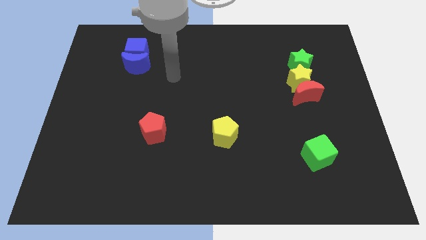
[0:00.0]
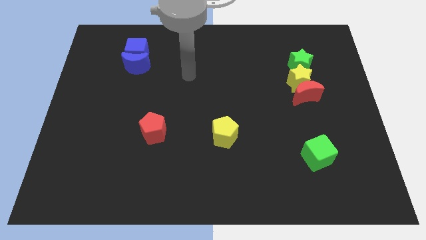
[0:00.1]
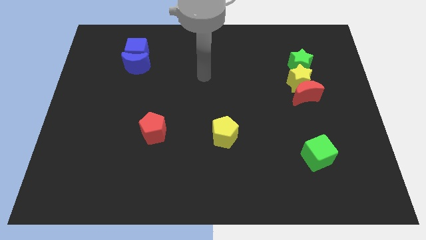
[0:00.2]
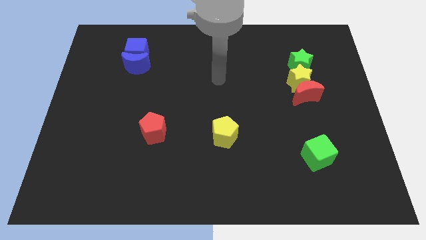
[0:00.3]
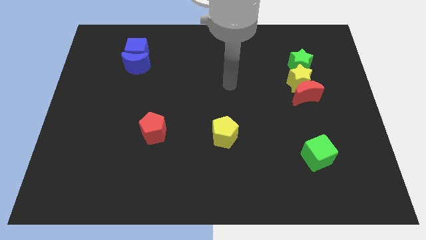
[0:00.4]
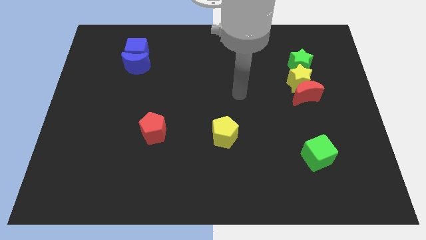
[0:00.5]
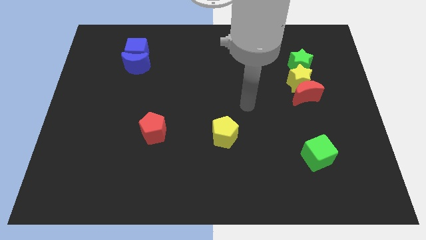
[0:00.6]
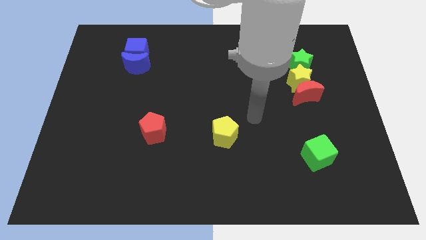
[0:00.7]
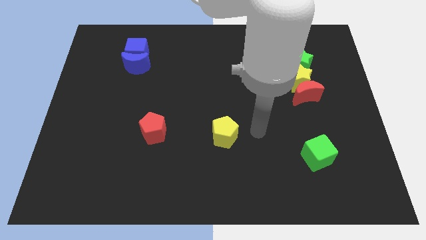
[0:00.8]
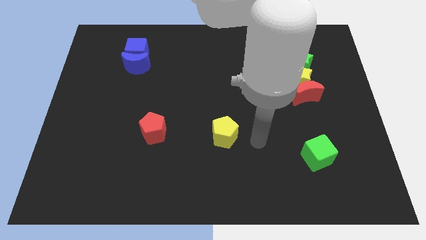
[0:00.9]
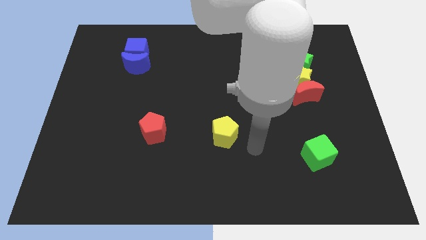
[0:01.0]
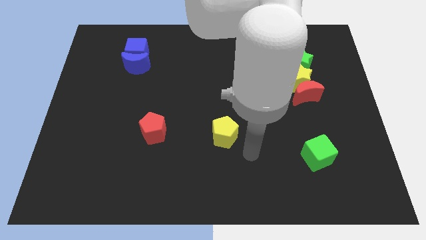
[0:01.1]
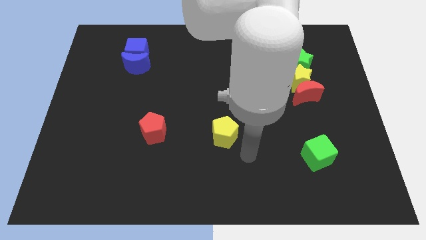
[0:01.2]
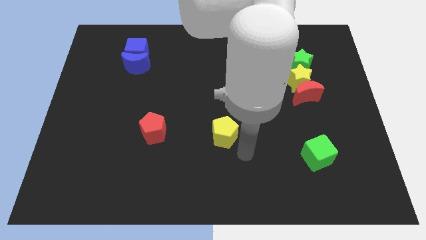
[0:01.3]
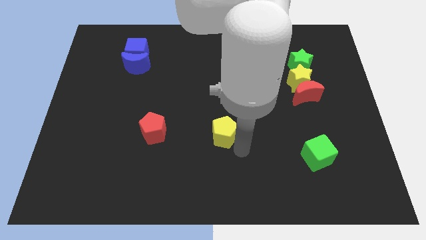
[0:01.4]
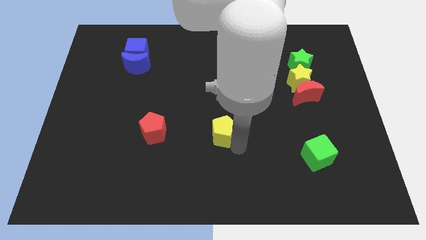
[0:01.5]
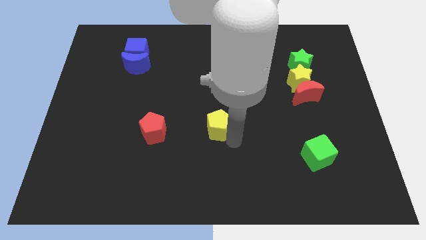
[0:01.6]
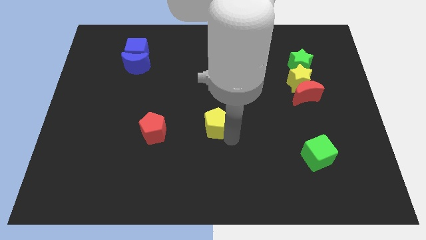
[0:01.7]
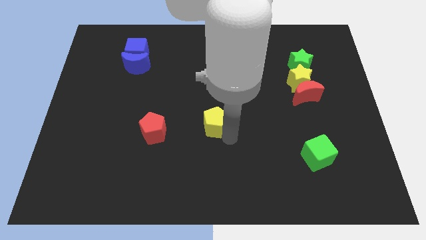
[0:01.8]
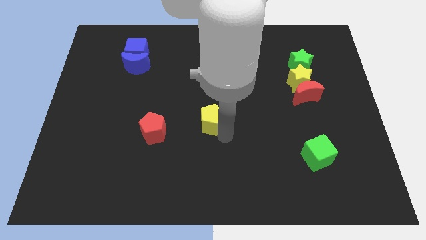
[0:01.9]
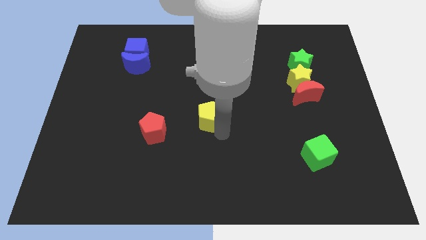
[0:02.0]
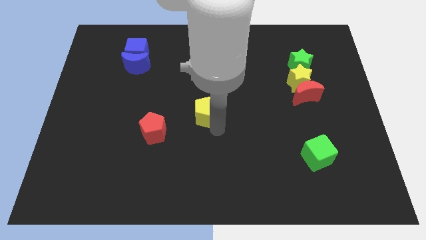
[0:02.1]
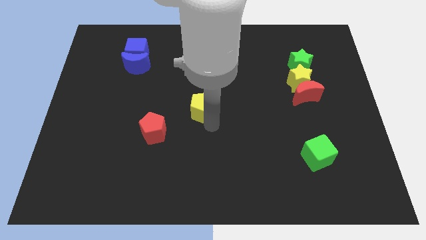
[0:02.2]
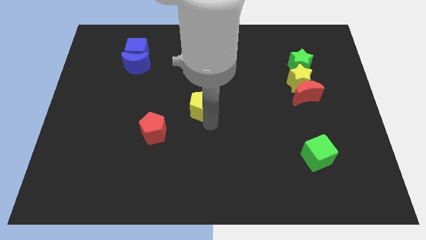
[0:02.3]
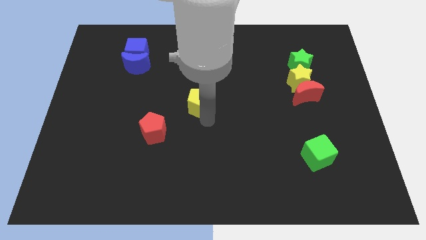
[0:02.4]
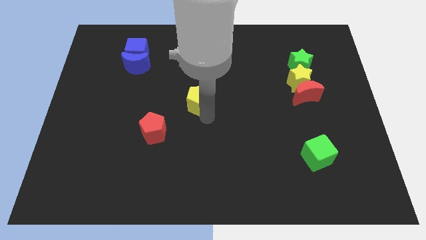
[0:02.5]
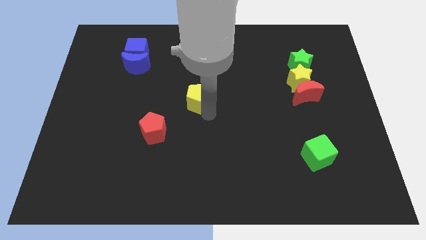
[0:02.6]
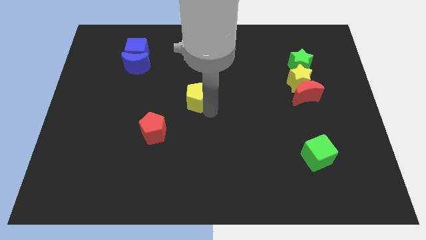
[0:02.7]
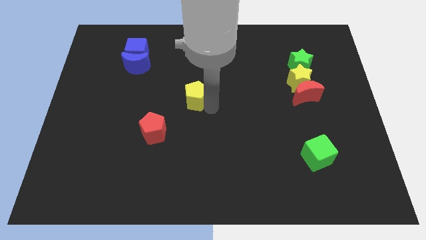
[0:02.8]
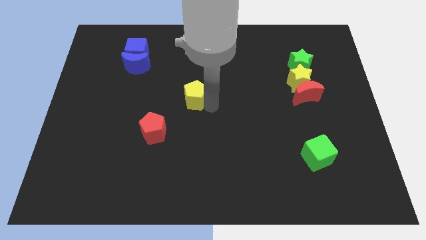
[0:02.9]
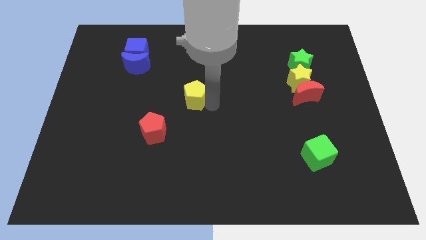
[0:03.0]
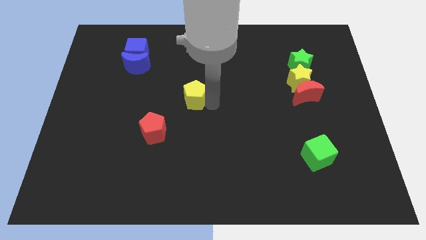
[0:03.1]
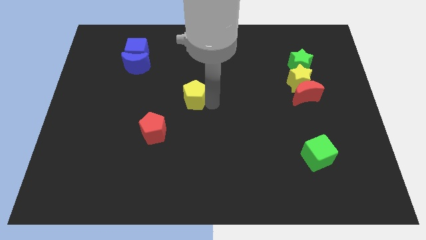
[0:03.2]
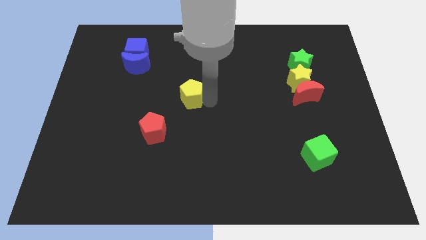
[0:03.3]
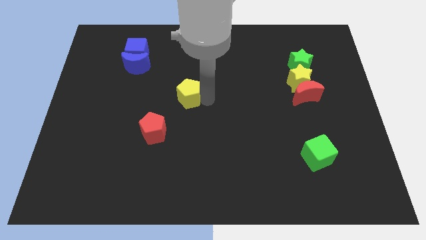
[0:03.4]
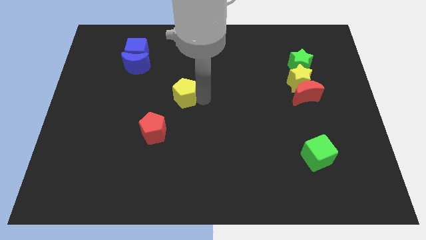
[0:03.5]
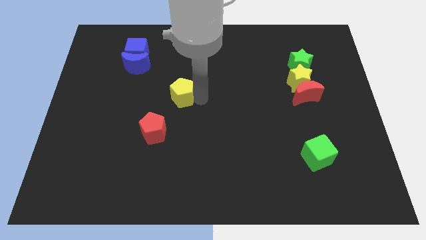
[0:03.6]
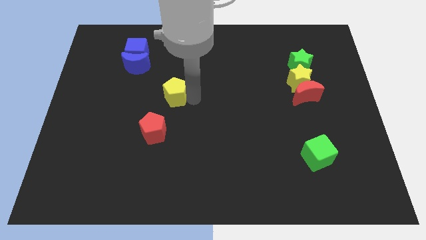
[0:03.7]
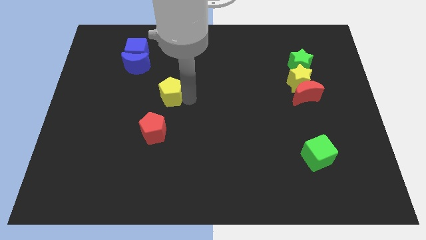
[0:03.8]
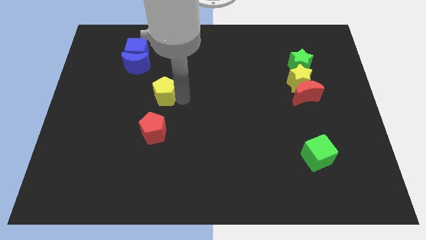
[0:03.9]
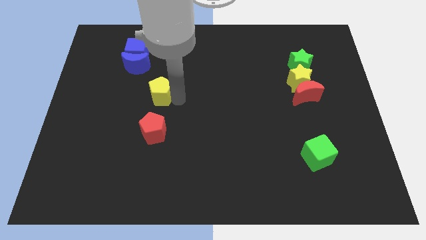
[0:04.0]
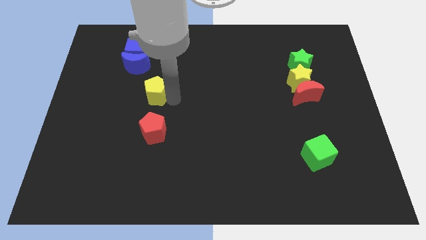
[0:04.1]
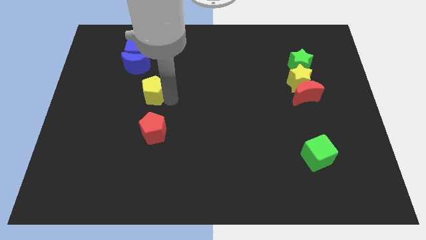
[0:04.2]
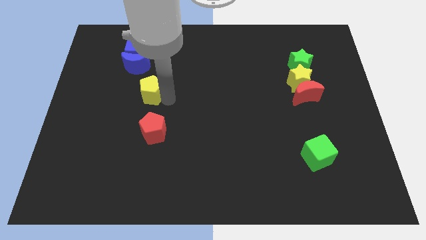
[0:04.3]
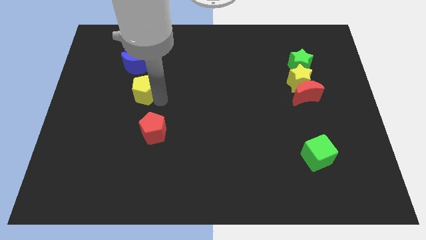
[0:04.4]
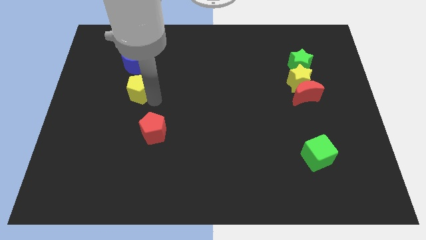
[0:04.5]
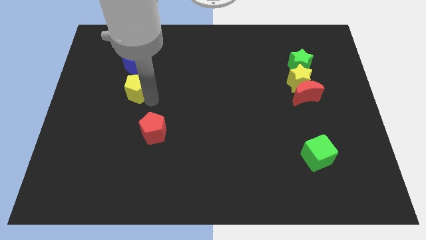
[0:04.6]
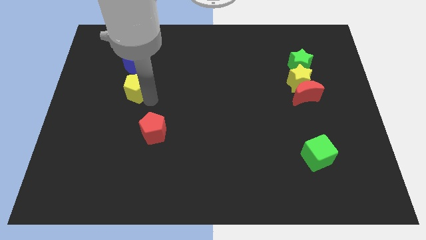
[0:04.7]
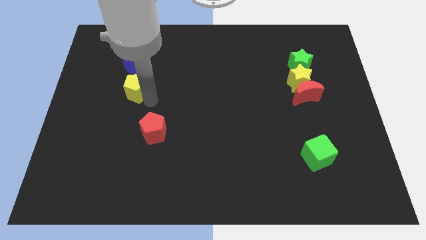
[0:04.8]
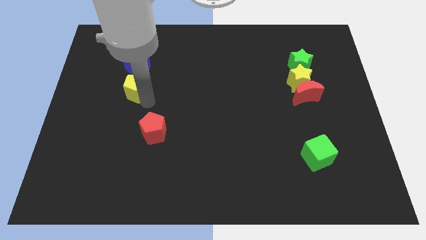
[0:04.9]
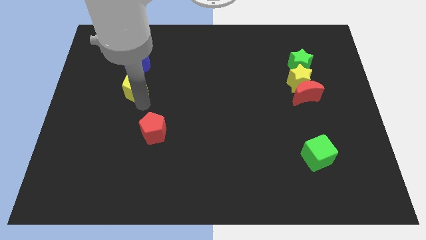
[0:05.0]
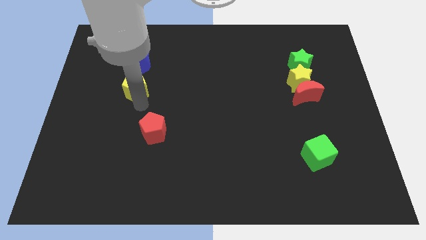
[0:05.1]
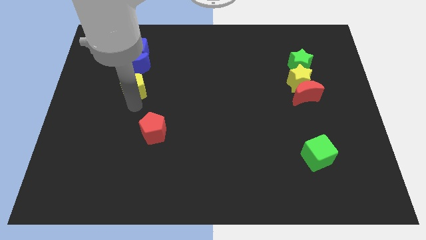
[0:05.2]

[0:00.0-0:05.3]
place the yellow pentagon below the blue crescent

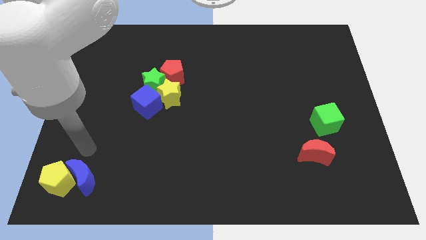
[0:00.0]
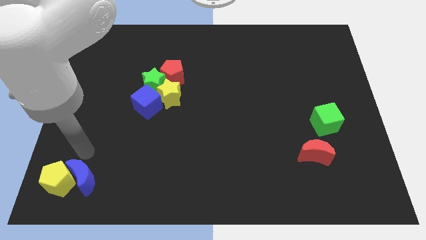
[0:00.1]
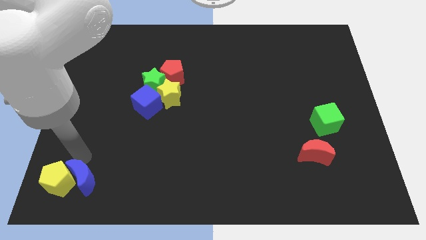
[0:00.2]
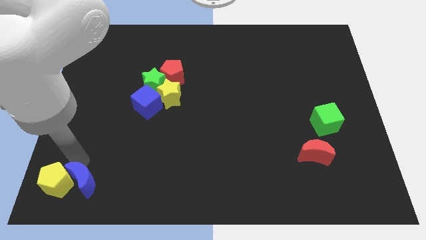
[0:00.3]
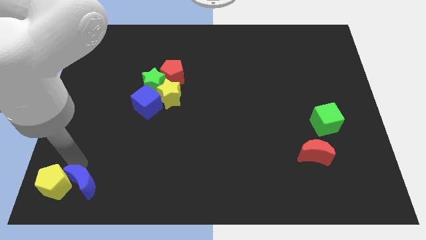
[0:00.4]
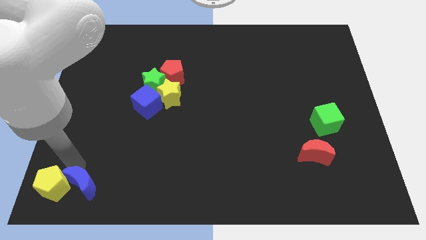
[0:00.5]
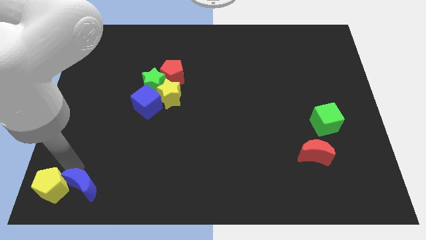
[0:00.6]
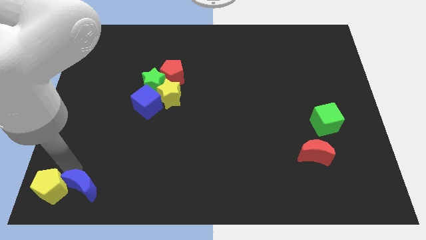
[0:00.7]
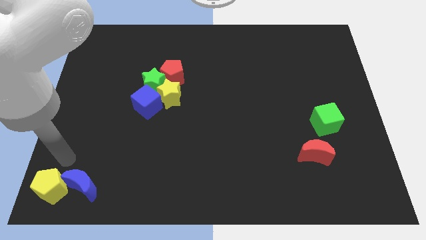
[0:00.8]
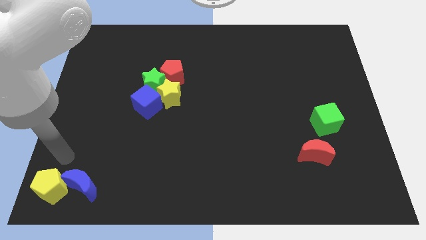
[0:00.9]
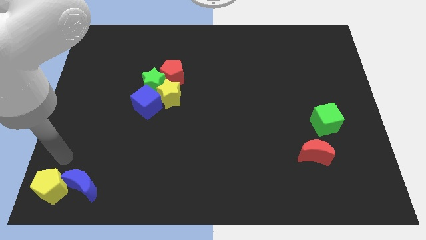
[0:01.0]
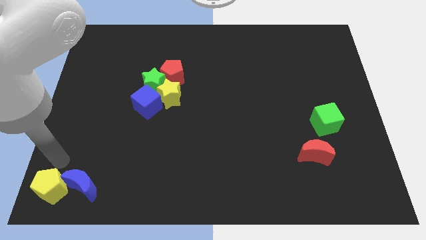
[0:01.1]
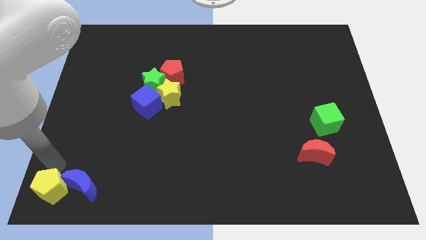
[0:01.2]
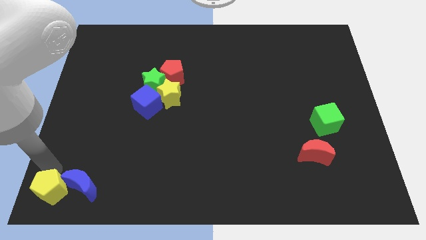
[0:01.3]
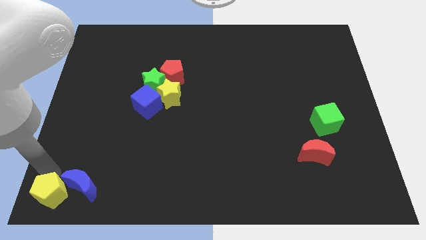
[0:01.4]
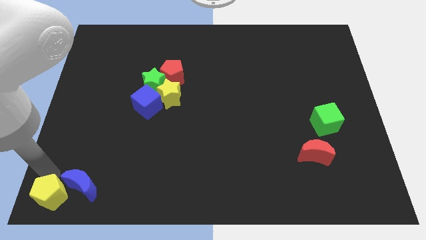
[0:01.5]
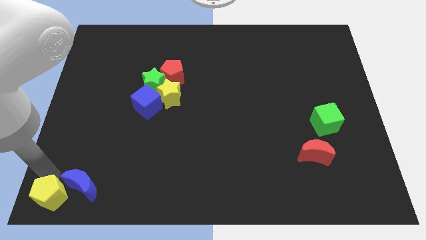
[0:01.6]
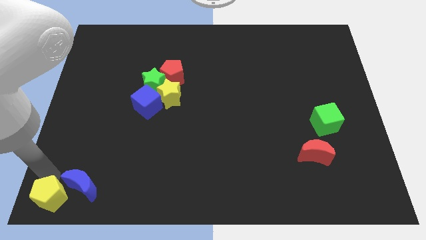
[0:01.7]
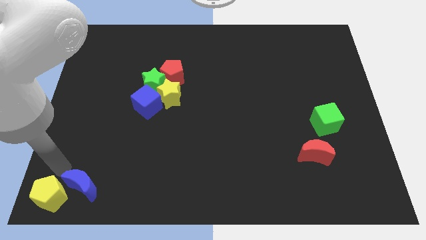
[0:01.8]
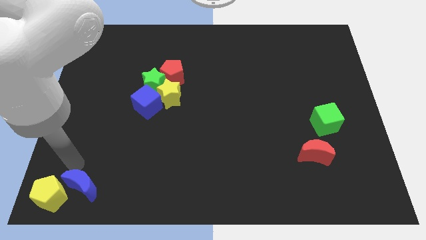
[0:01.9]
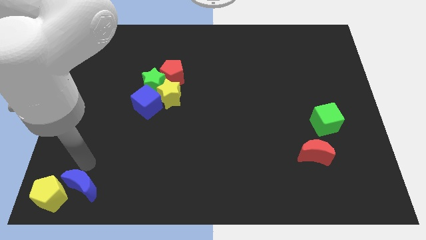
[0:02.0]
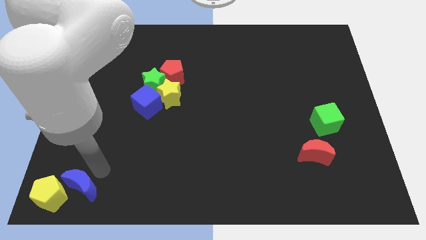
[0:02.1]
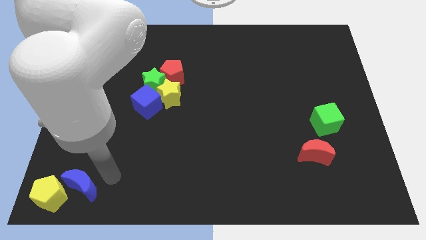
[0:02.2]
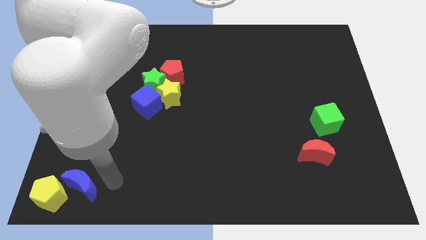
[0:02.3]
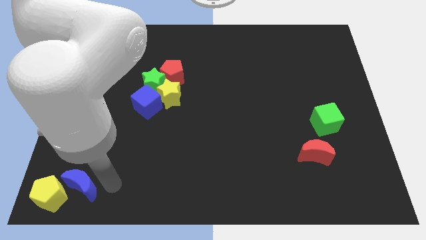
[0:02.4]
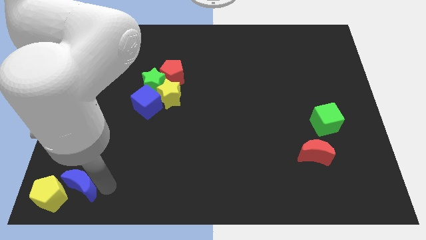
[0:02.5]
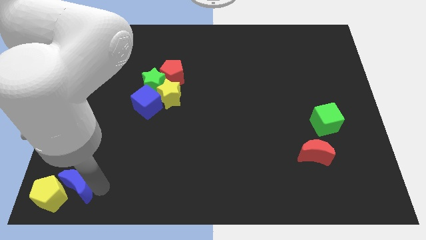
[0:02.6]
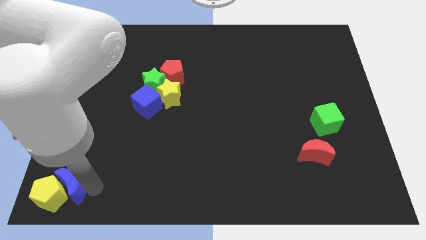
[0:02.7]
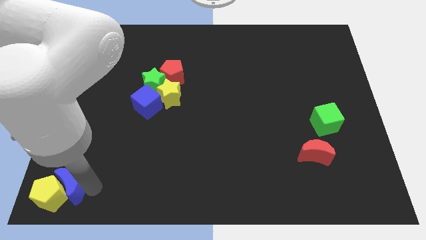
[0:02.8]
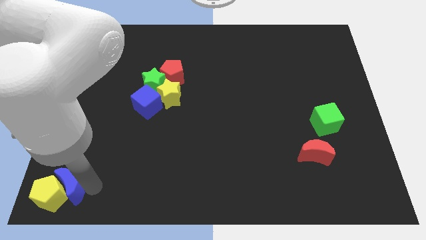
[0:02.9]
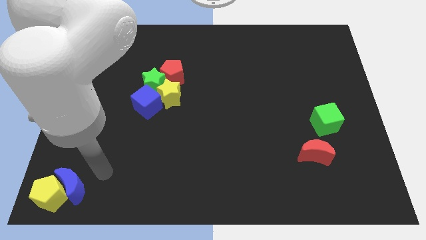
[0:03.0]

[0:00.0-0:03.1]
place the yellow pentagon and blue crescent at the bottom left of the board

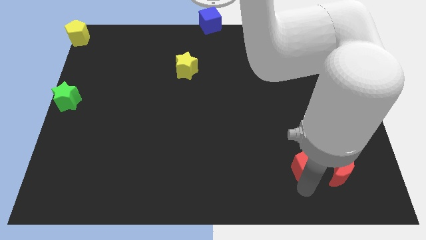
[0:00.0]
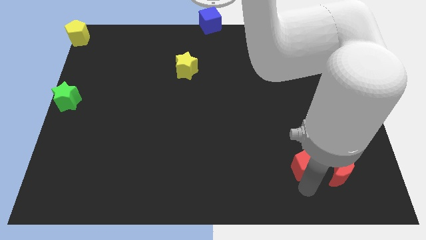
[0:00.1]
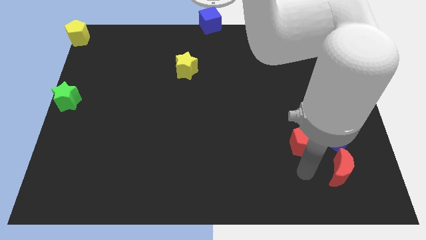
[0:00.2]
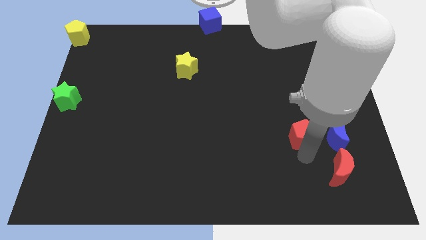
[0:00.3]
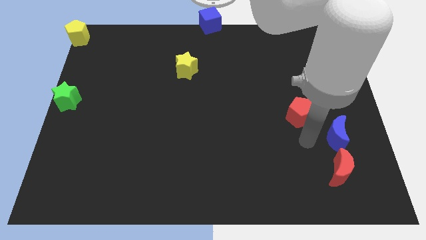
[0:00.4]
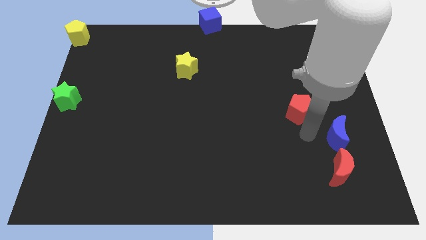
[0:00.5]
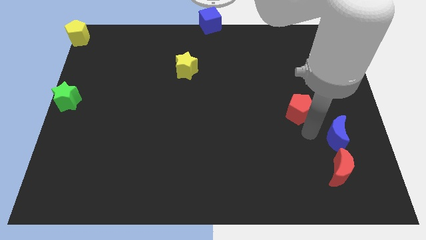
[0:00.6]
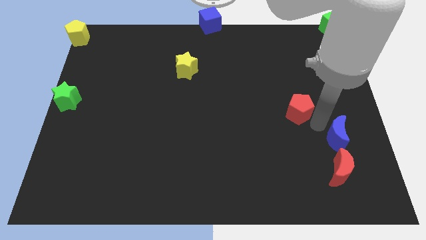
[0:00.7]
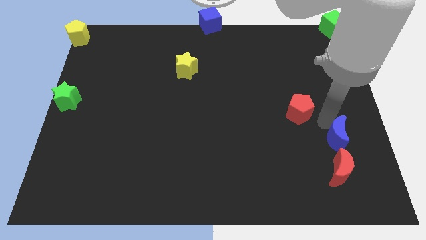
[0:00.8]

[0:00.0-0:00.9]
move red pentagon slightly up
